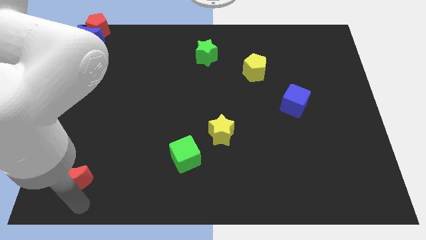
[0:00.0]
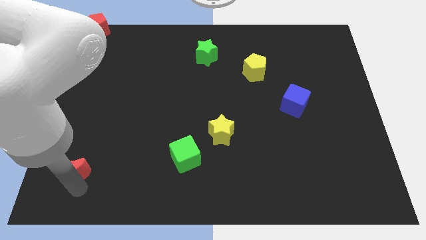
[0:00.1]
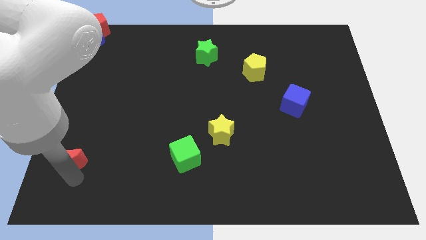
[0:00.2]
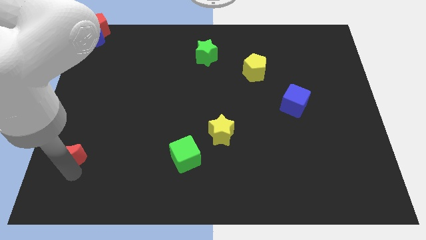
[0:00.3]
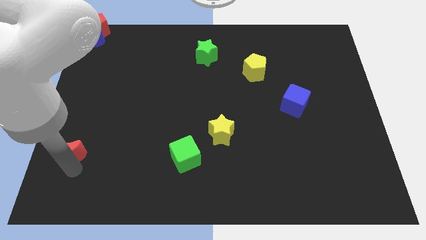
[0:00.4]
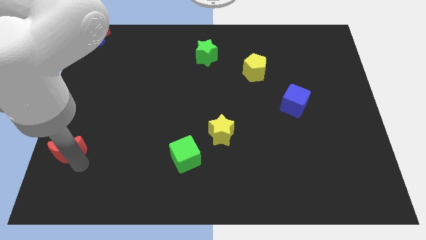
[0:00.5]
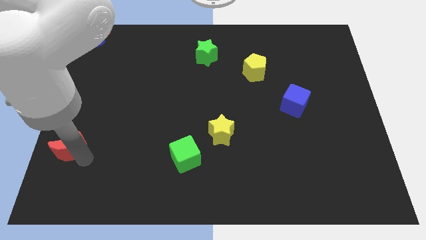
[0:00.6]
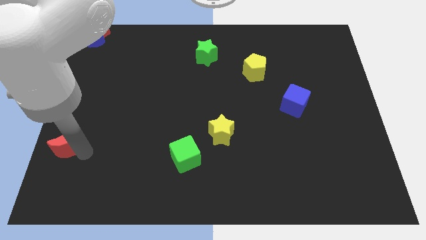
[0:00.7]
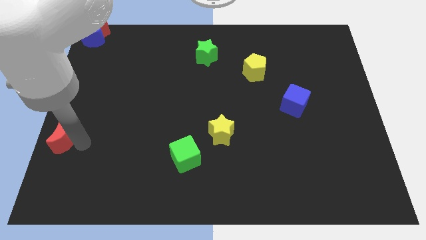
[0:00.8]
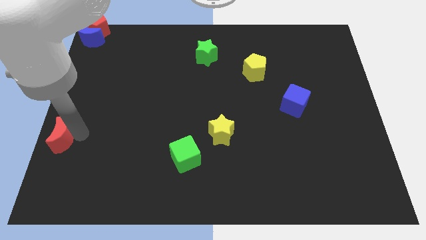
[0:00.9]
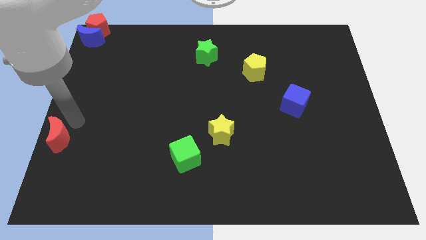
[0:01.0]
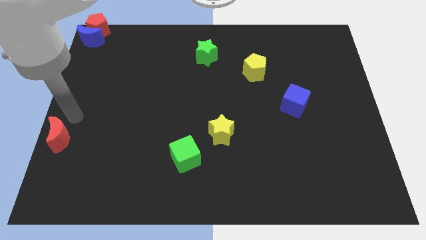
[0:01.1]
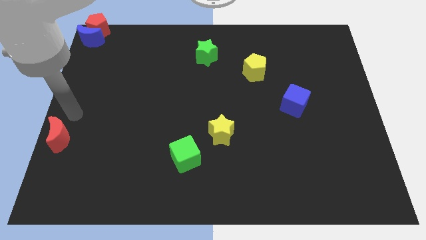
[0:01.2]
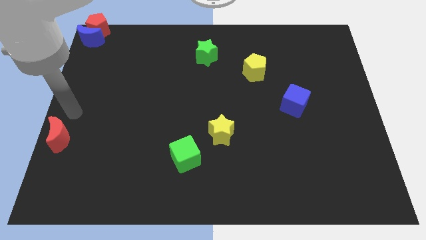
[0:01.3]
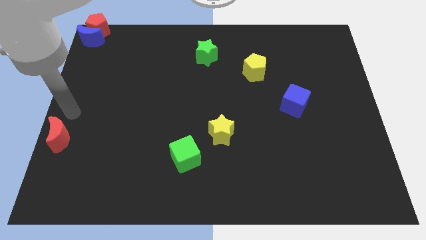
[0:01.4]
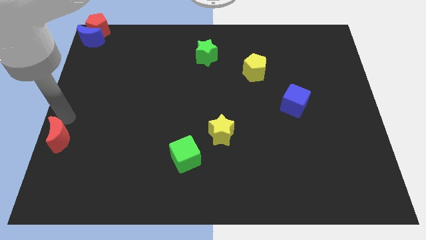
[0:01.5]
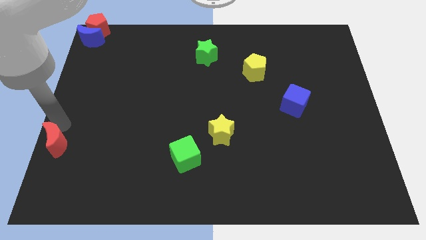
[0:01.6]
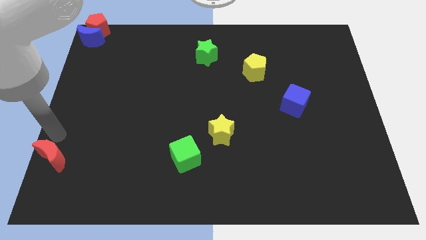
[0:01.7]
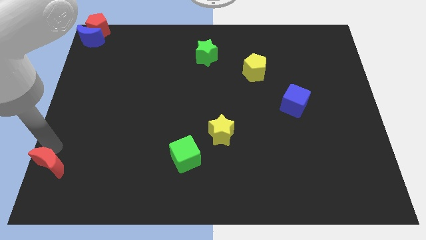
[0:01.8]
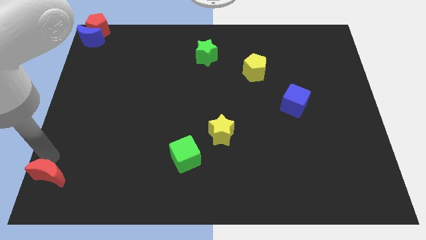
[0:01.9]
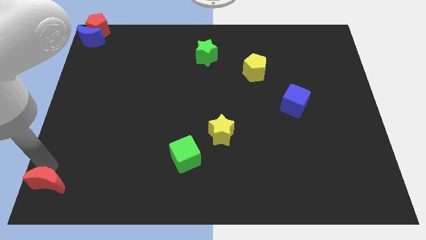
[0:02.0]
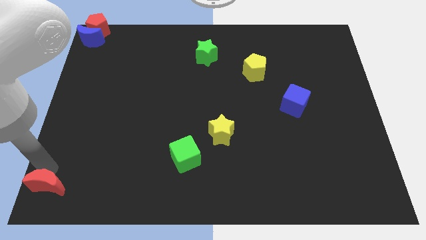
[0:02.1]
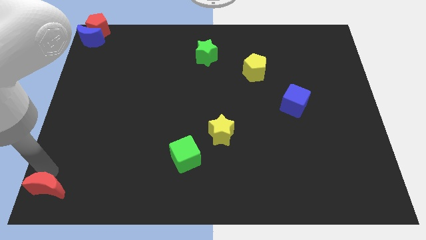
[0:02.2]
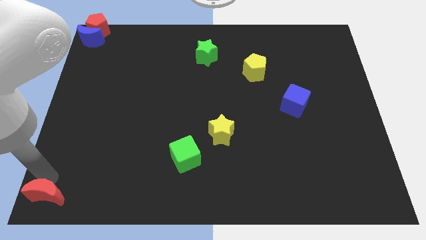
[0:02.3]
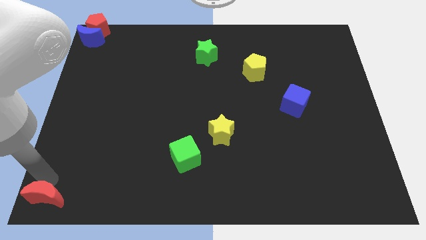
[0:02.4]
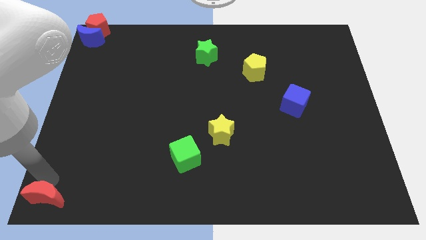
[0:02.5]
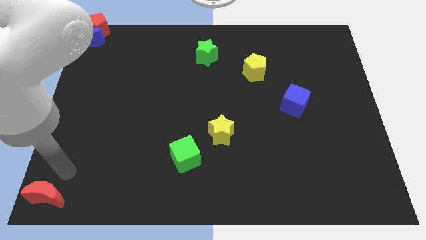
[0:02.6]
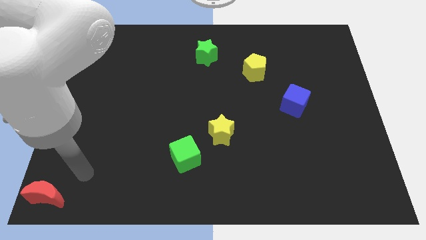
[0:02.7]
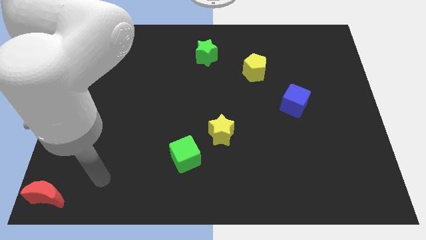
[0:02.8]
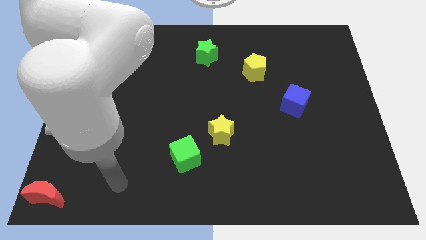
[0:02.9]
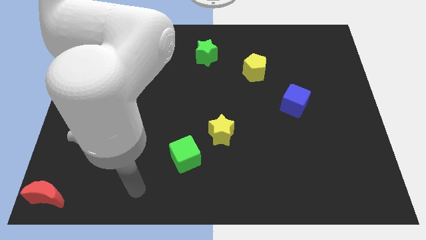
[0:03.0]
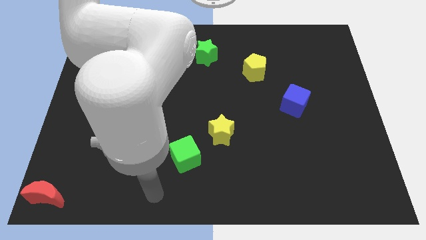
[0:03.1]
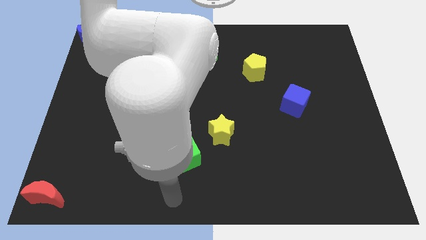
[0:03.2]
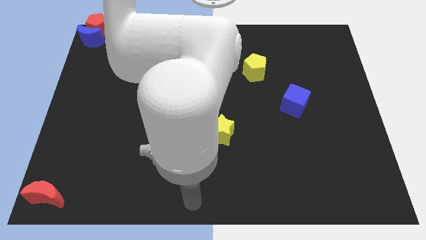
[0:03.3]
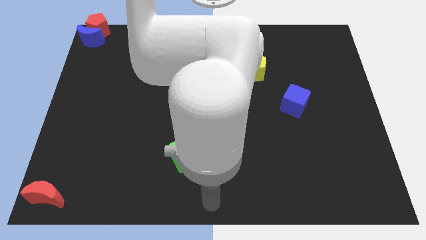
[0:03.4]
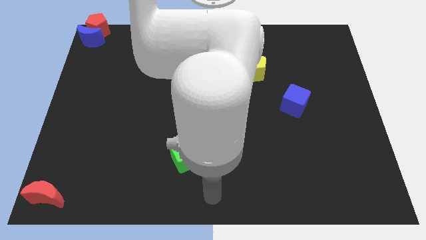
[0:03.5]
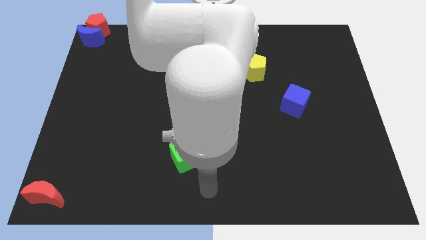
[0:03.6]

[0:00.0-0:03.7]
place the red crescent at the bottom left corner of the board

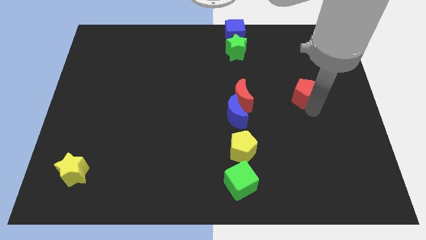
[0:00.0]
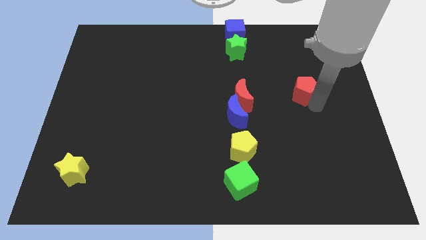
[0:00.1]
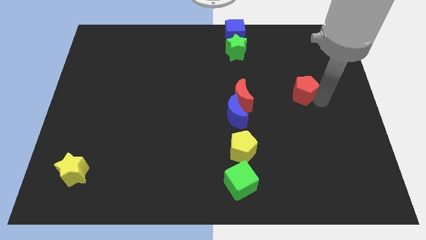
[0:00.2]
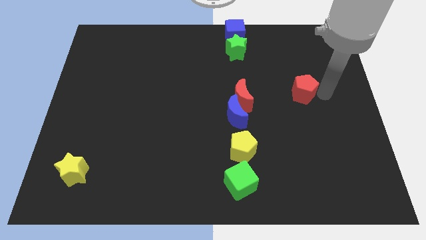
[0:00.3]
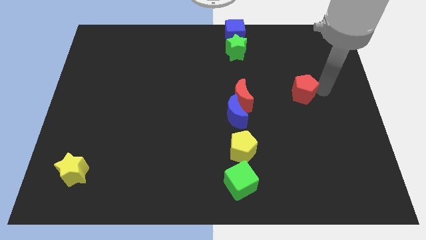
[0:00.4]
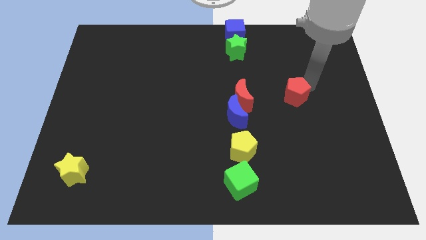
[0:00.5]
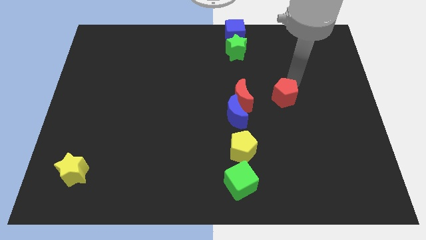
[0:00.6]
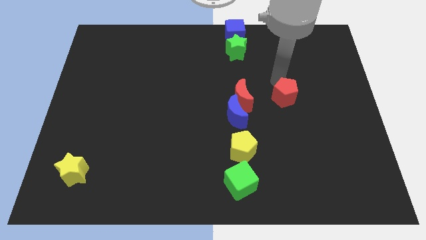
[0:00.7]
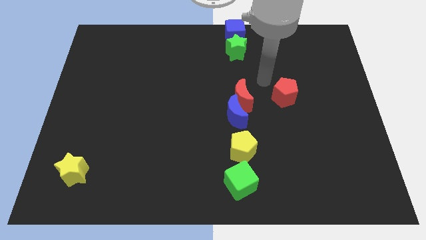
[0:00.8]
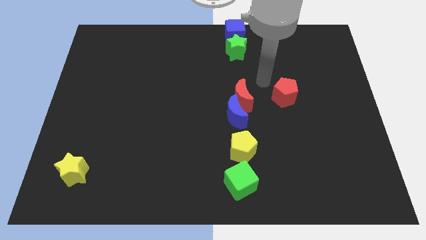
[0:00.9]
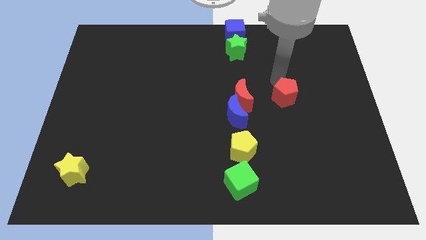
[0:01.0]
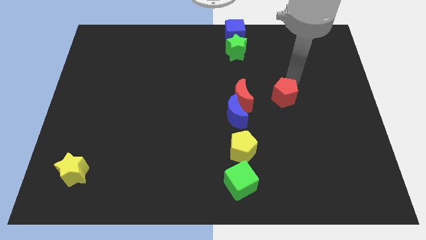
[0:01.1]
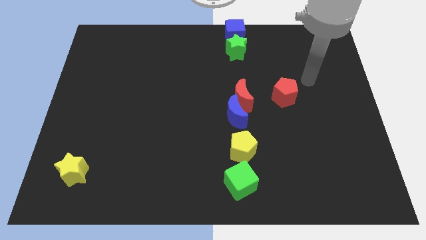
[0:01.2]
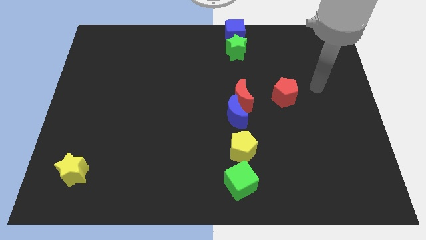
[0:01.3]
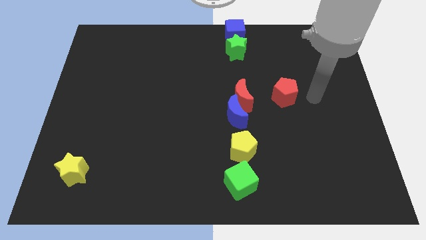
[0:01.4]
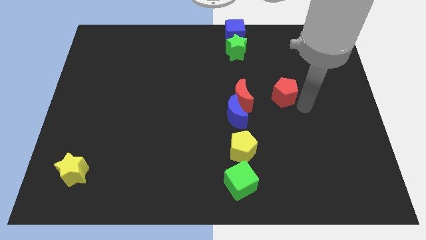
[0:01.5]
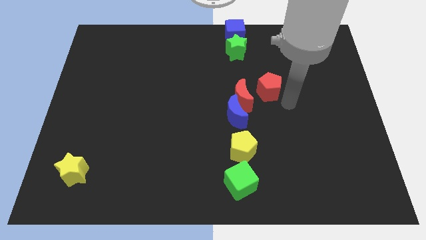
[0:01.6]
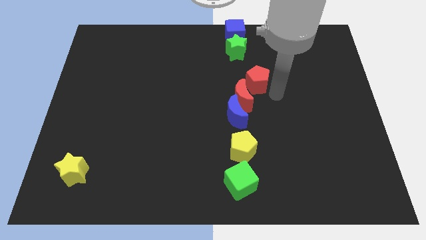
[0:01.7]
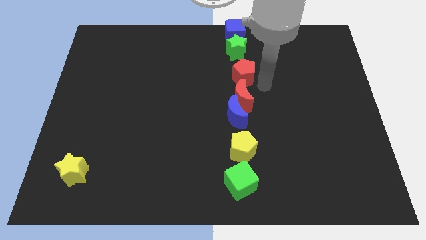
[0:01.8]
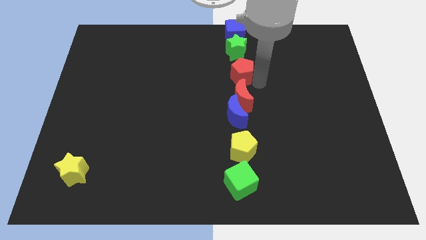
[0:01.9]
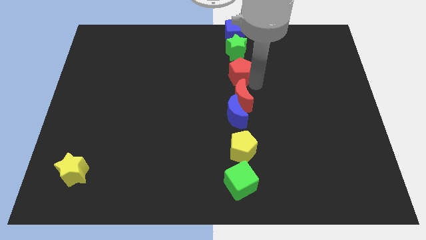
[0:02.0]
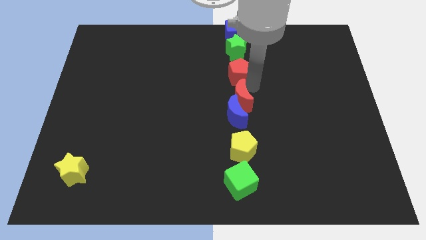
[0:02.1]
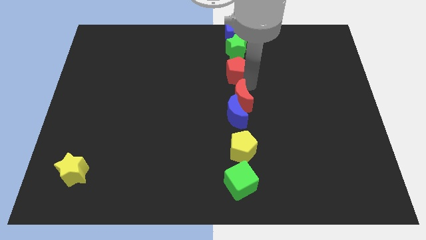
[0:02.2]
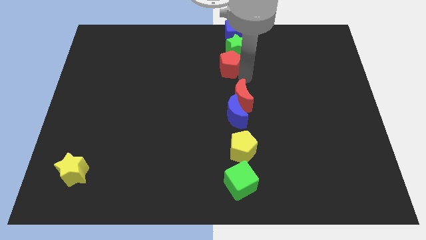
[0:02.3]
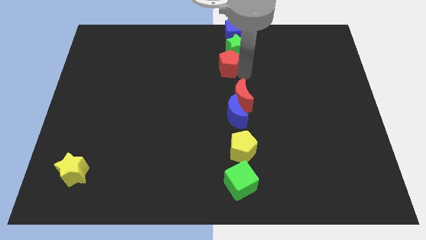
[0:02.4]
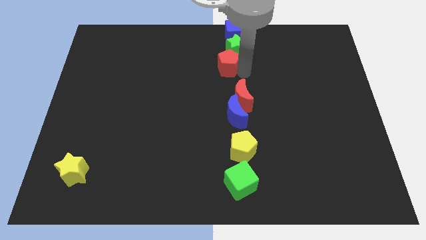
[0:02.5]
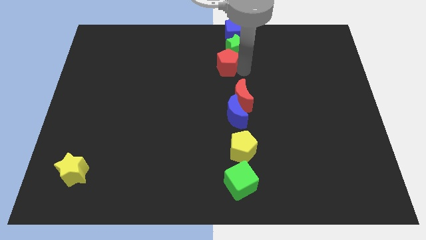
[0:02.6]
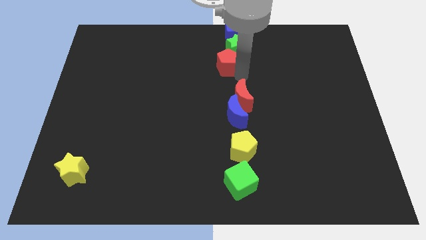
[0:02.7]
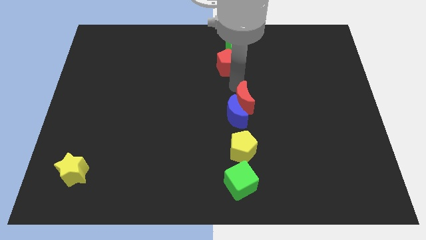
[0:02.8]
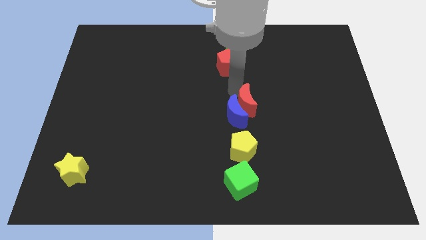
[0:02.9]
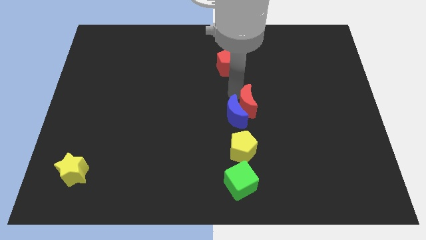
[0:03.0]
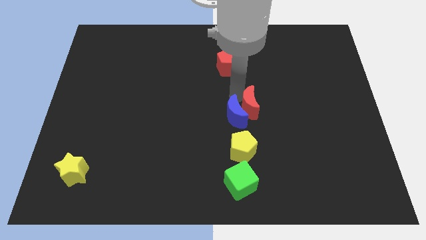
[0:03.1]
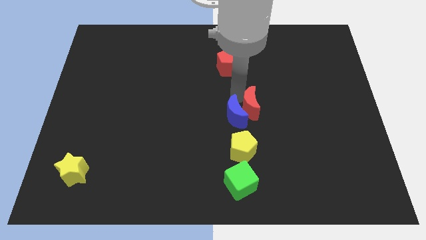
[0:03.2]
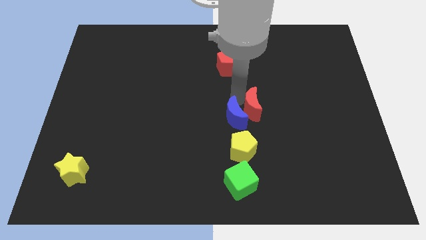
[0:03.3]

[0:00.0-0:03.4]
place the red pentagon at the bottom of the green star

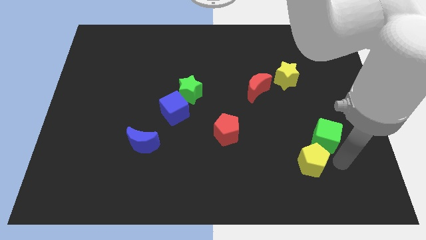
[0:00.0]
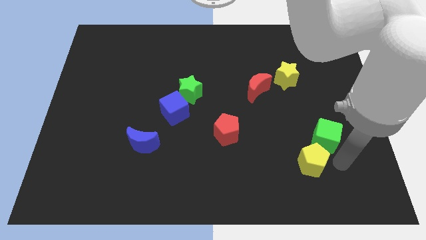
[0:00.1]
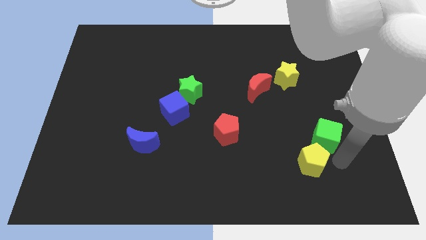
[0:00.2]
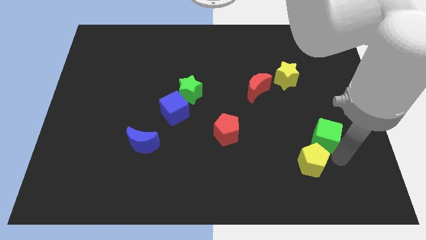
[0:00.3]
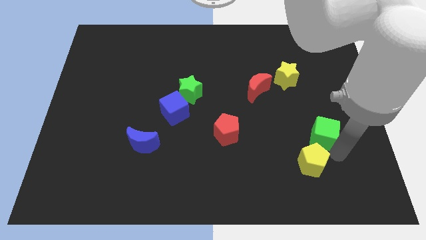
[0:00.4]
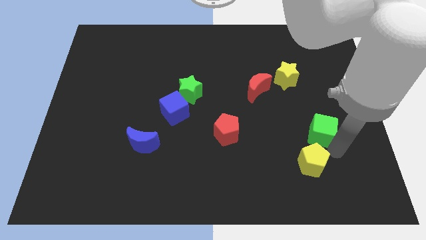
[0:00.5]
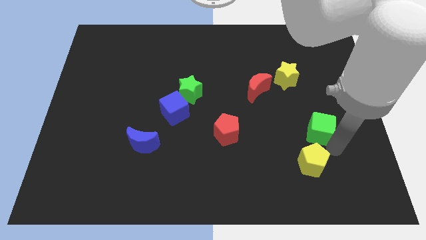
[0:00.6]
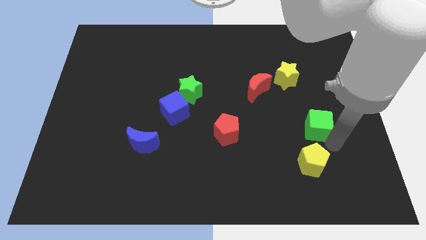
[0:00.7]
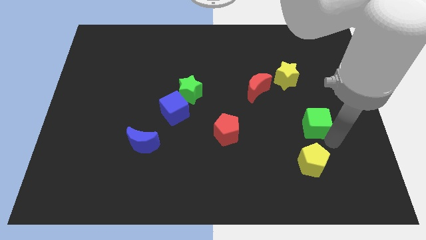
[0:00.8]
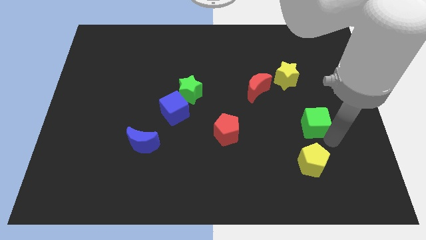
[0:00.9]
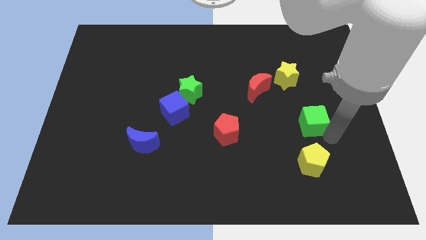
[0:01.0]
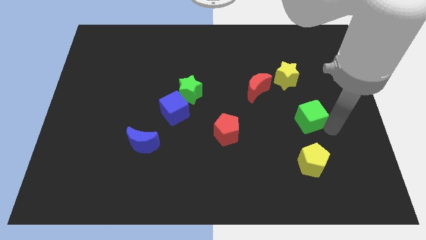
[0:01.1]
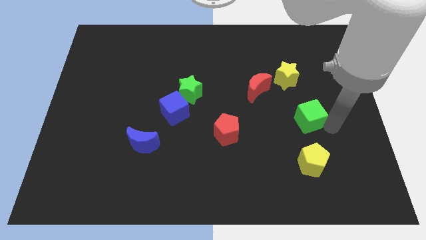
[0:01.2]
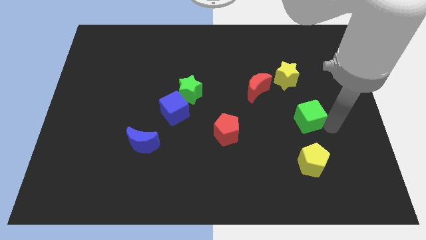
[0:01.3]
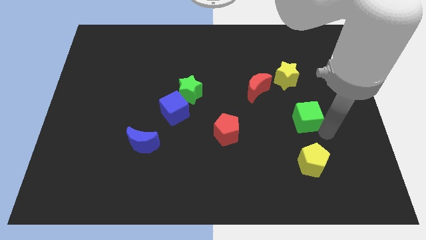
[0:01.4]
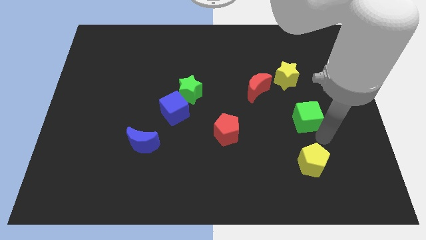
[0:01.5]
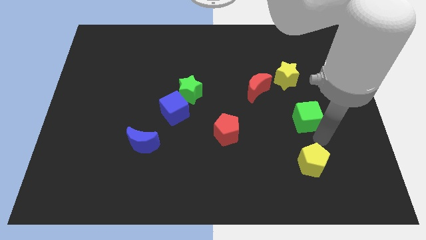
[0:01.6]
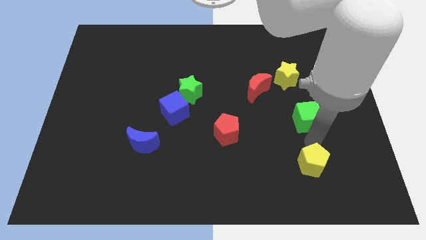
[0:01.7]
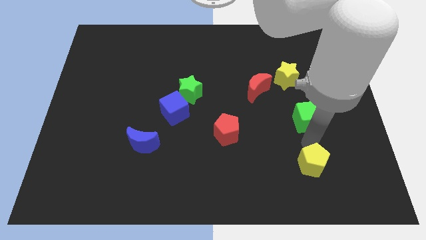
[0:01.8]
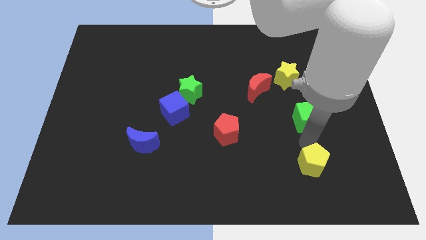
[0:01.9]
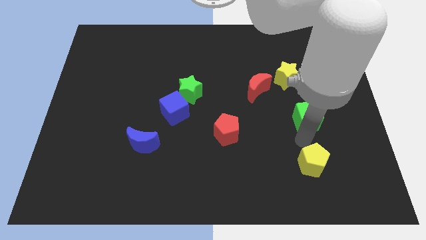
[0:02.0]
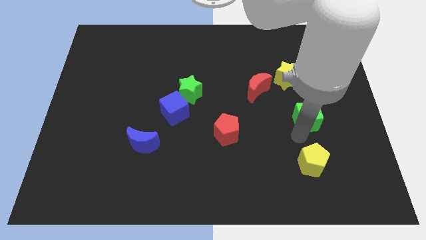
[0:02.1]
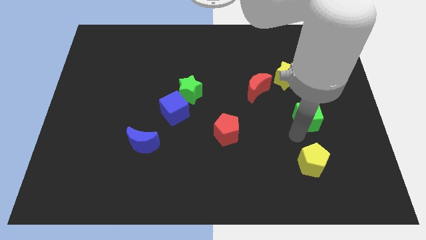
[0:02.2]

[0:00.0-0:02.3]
place the green cube to the top of the yellow pentagon
